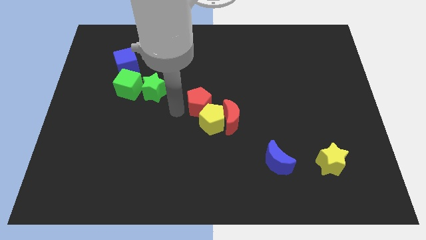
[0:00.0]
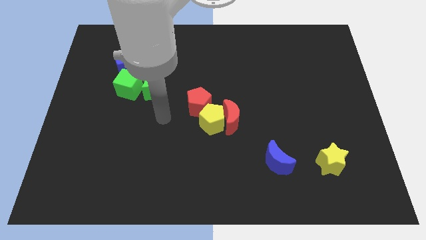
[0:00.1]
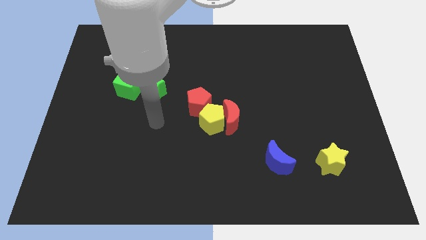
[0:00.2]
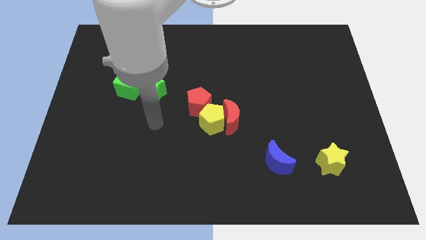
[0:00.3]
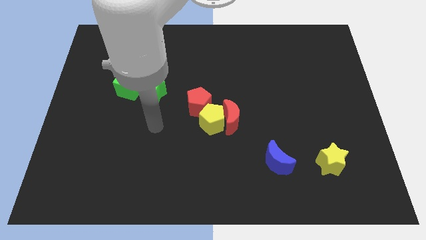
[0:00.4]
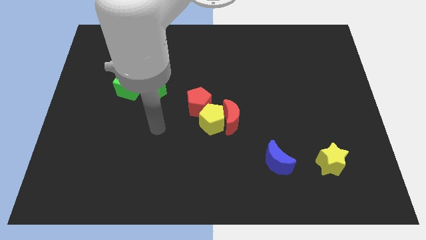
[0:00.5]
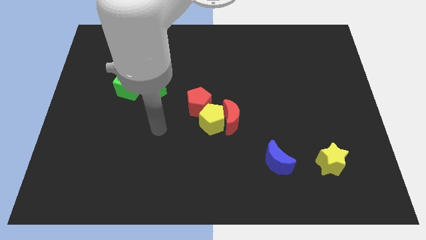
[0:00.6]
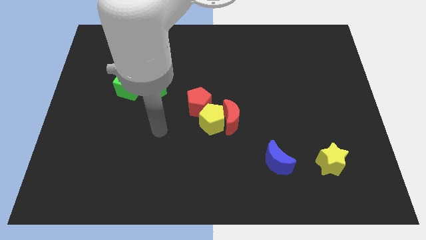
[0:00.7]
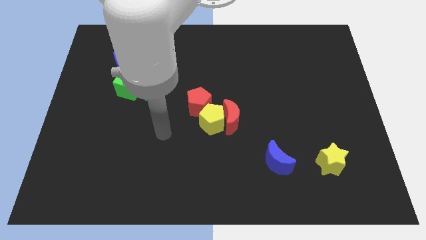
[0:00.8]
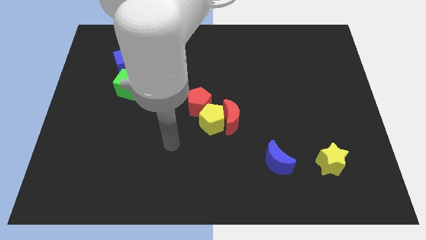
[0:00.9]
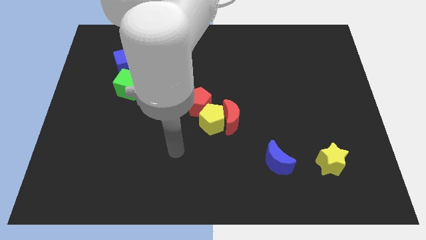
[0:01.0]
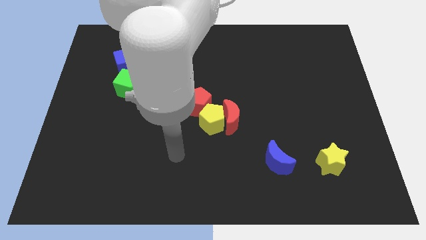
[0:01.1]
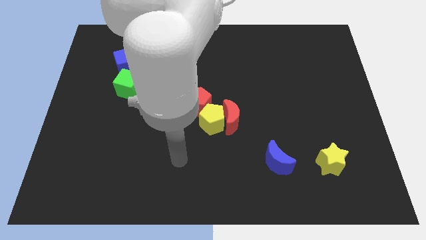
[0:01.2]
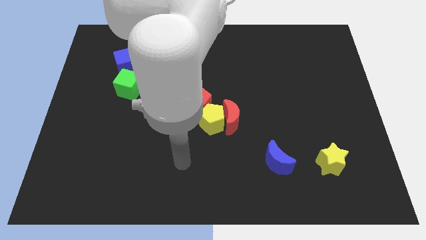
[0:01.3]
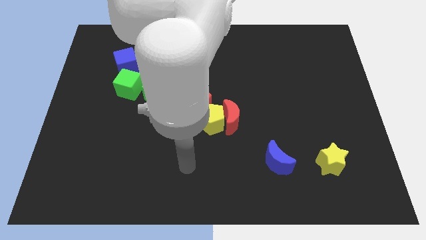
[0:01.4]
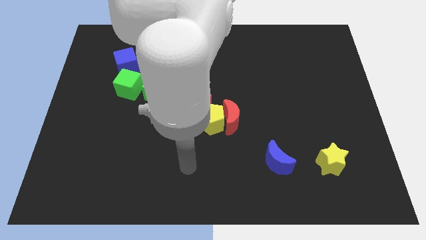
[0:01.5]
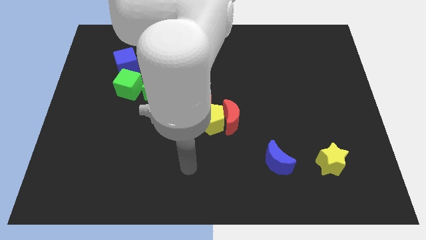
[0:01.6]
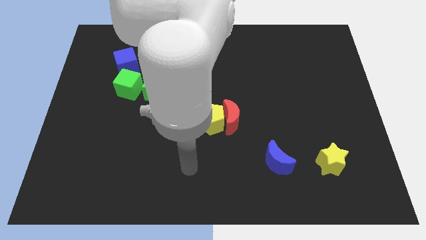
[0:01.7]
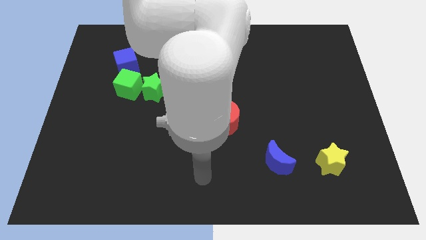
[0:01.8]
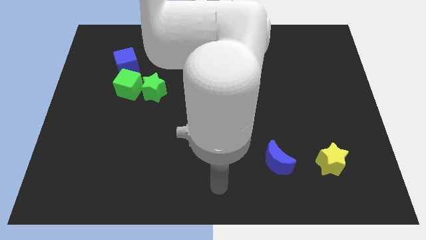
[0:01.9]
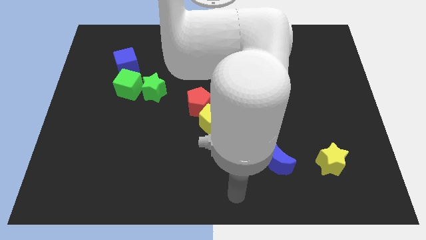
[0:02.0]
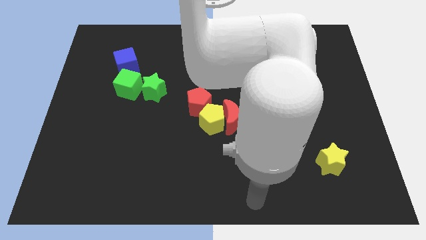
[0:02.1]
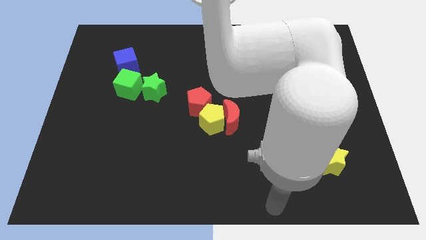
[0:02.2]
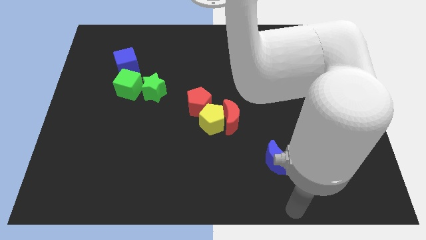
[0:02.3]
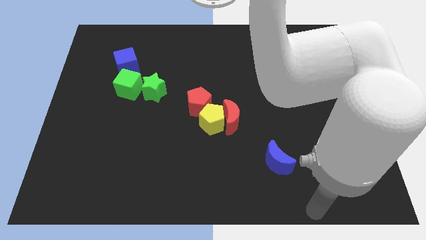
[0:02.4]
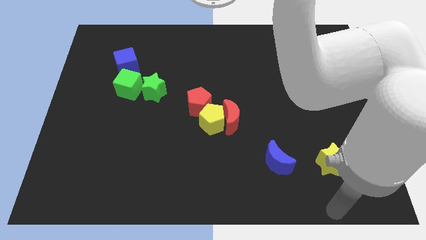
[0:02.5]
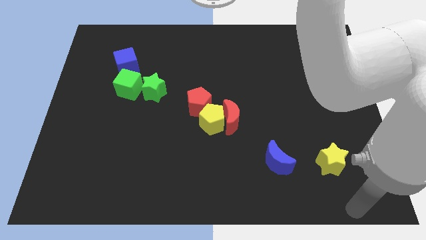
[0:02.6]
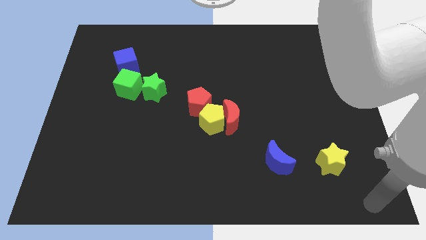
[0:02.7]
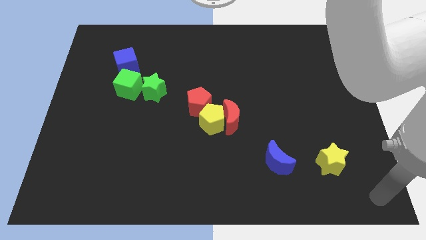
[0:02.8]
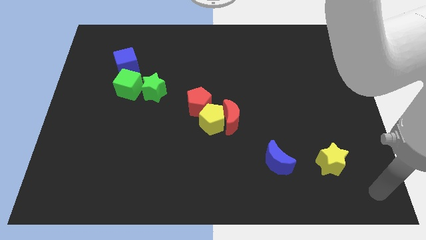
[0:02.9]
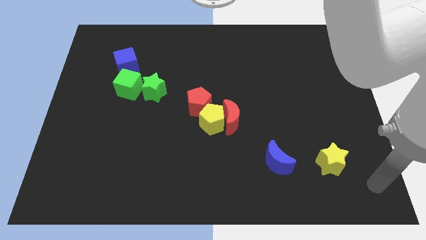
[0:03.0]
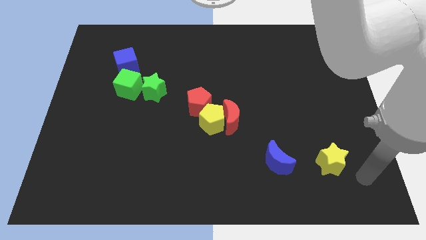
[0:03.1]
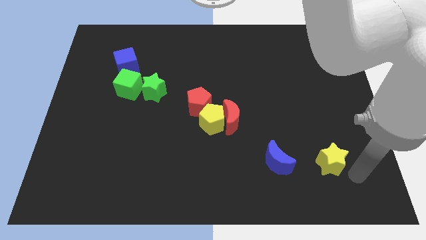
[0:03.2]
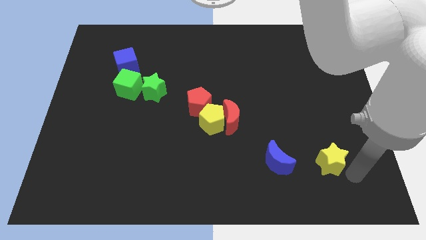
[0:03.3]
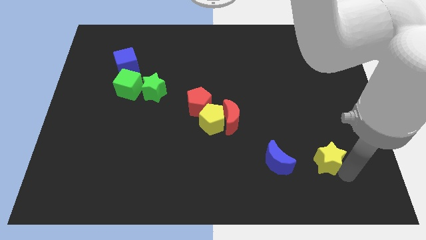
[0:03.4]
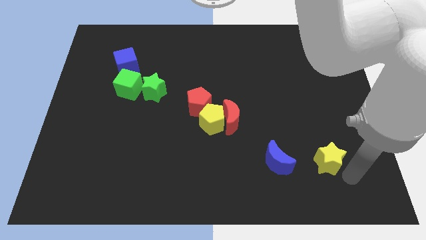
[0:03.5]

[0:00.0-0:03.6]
touch the bottom of yellow star

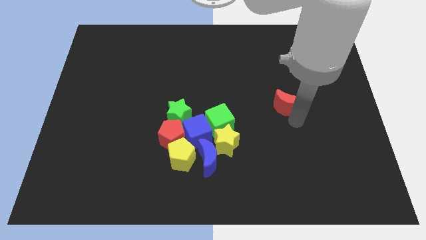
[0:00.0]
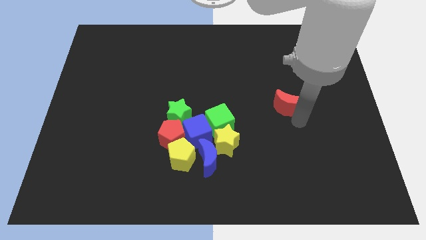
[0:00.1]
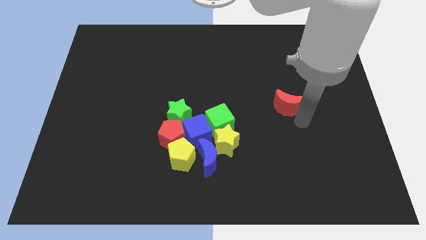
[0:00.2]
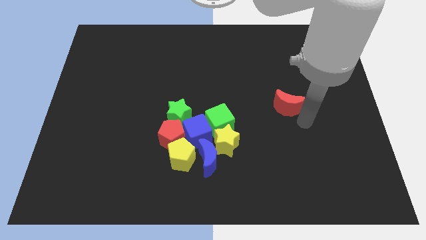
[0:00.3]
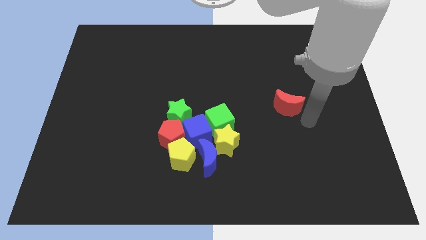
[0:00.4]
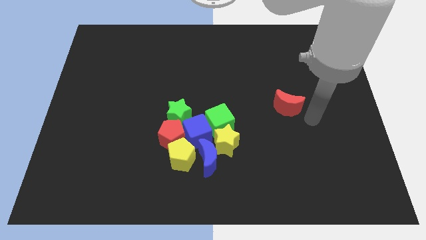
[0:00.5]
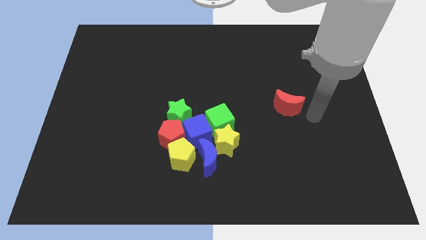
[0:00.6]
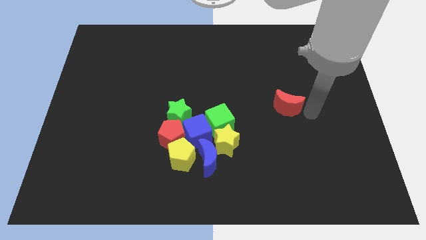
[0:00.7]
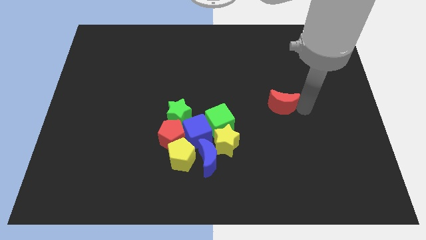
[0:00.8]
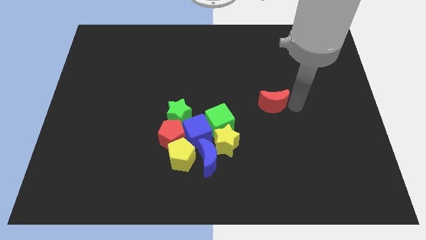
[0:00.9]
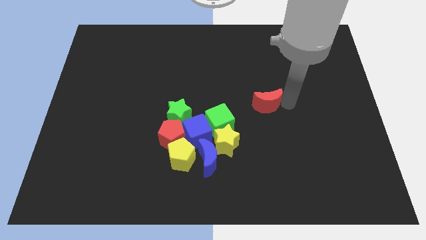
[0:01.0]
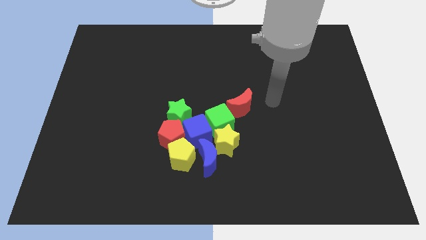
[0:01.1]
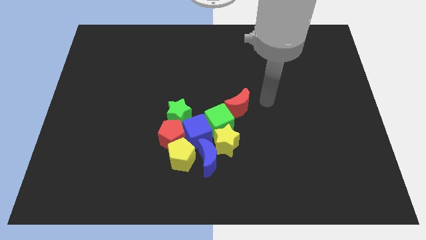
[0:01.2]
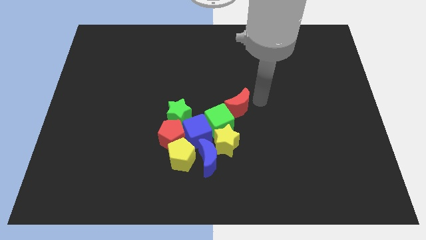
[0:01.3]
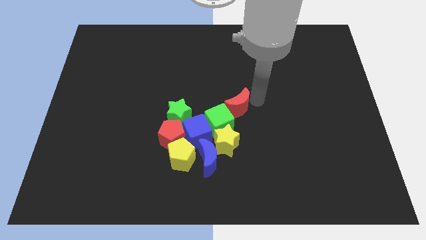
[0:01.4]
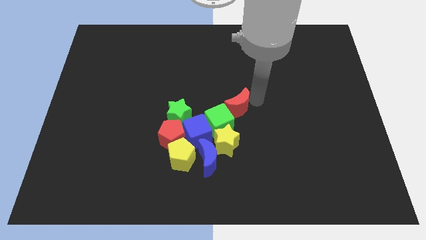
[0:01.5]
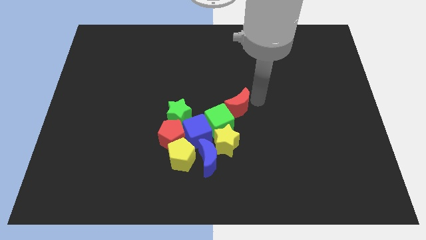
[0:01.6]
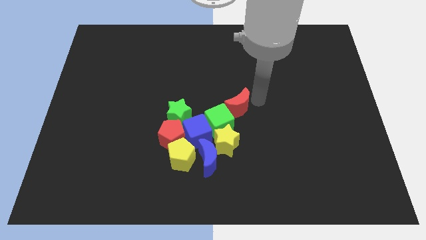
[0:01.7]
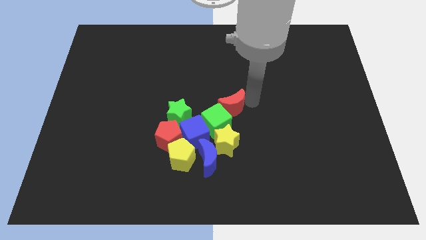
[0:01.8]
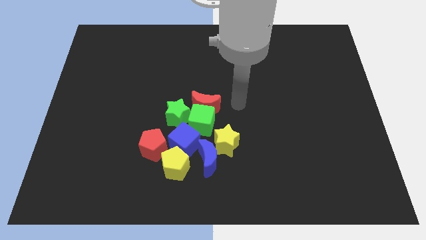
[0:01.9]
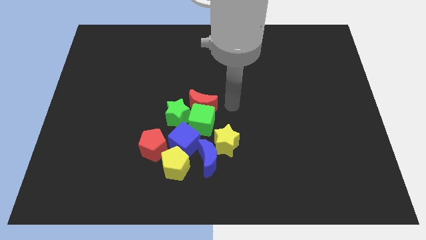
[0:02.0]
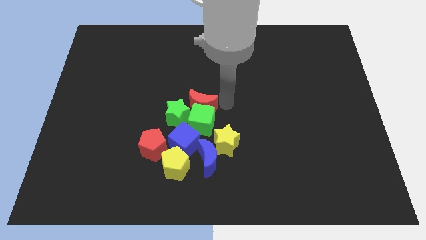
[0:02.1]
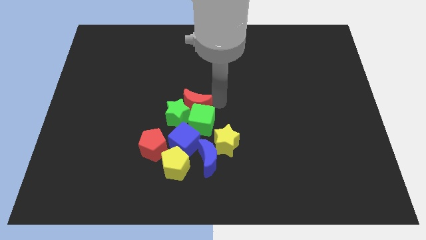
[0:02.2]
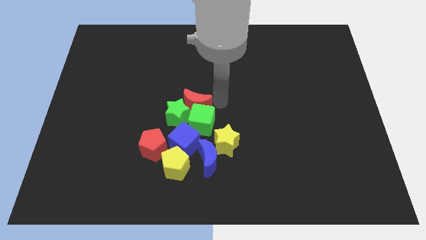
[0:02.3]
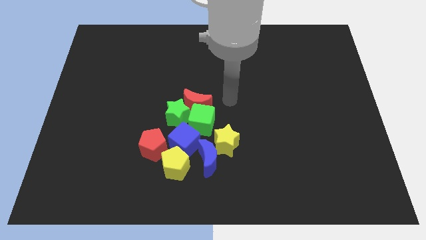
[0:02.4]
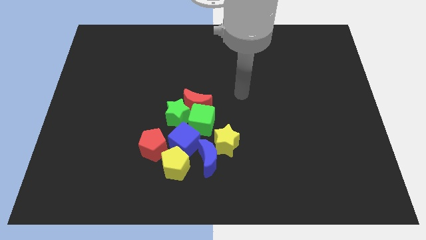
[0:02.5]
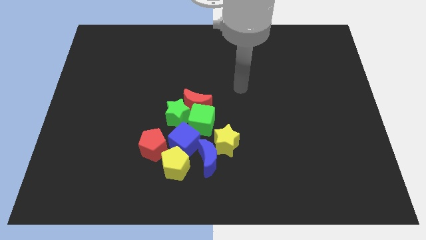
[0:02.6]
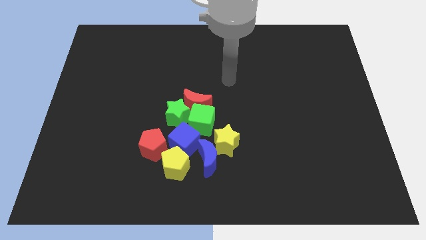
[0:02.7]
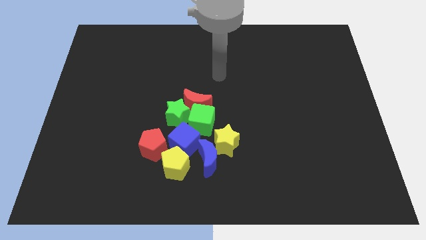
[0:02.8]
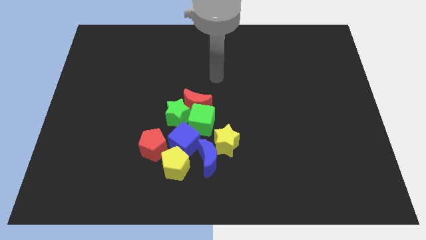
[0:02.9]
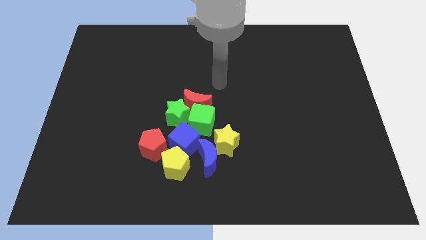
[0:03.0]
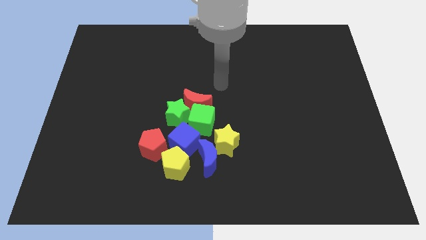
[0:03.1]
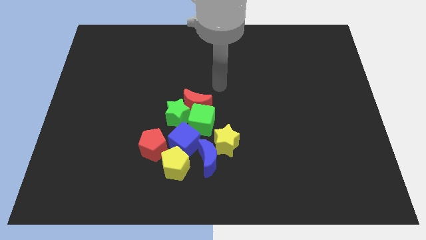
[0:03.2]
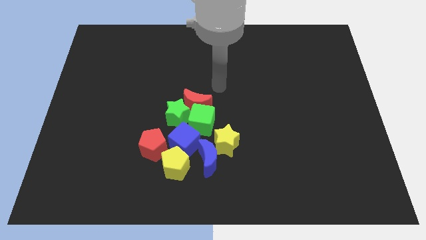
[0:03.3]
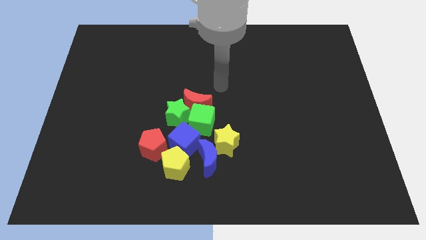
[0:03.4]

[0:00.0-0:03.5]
move the red moon into the group of blocks

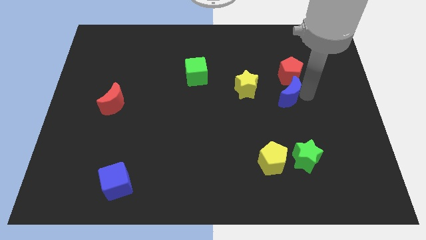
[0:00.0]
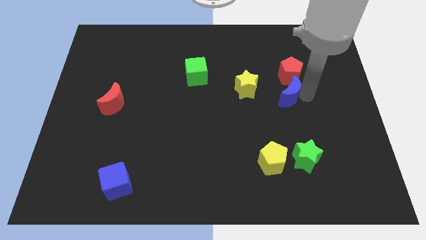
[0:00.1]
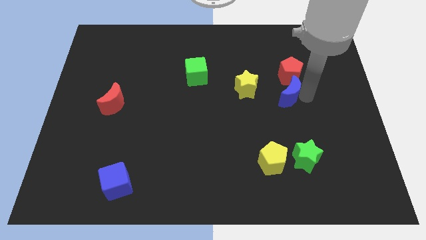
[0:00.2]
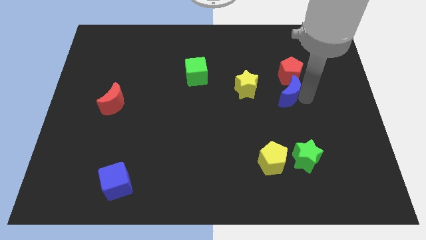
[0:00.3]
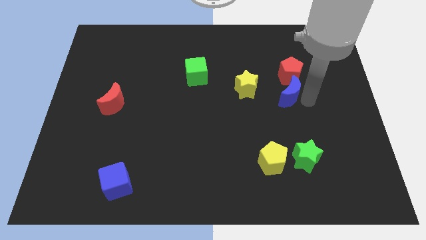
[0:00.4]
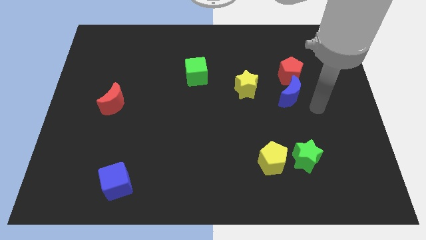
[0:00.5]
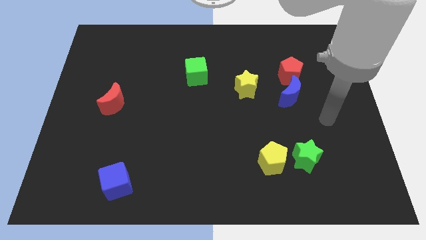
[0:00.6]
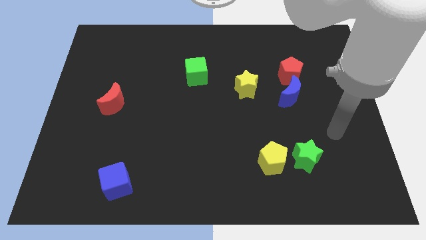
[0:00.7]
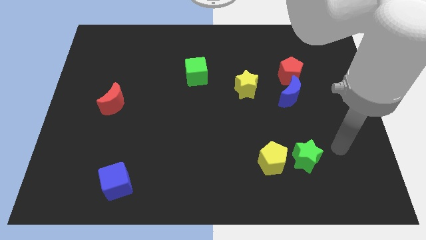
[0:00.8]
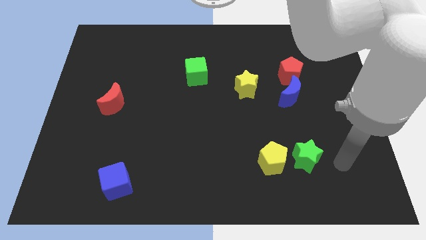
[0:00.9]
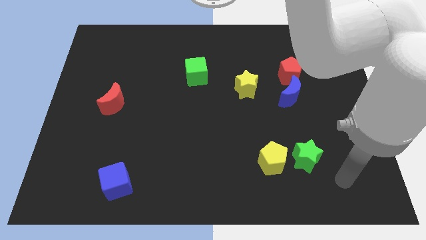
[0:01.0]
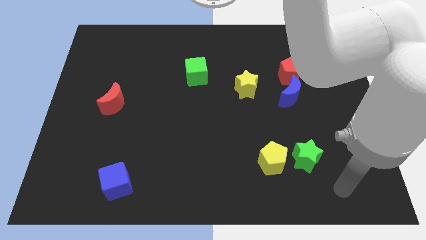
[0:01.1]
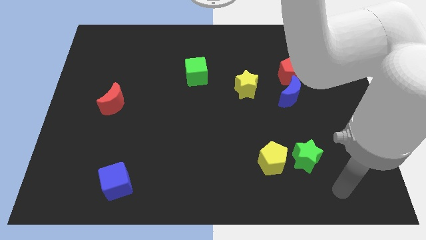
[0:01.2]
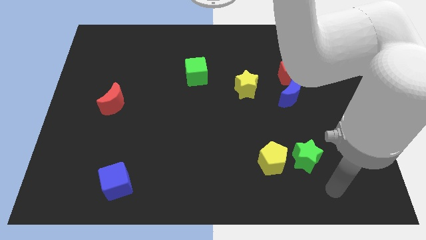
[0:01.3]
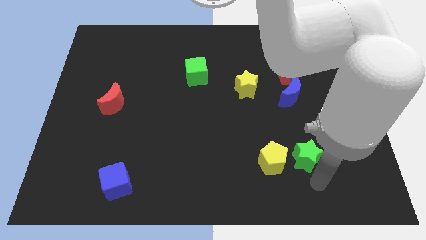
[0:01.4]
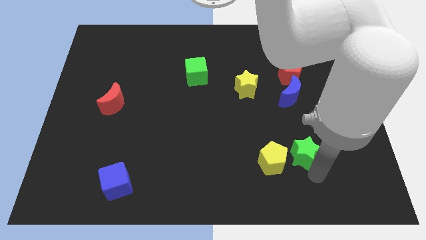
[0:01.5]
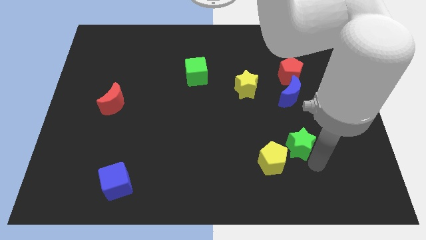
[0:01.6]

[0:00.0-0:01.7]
place your arm towards green star
